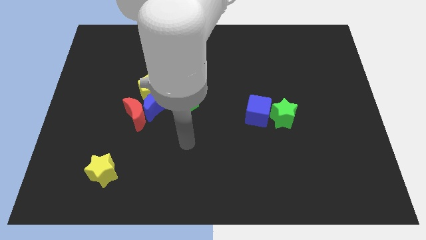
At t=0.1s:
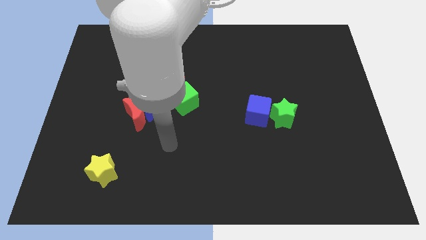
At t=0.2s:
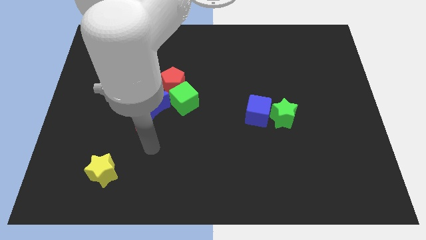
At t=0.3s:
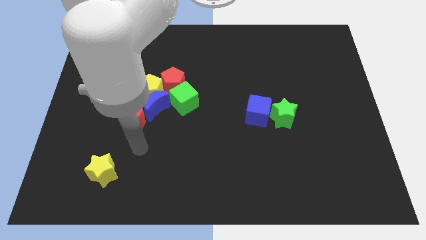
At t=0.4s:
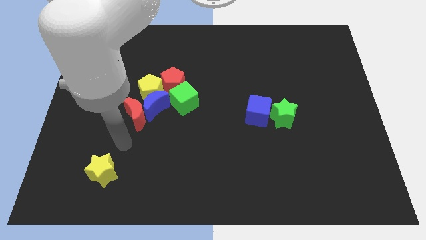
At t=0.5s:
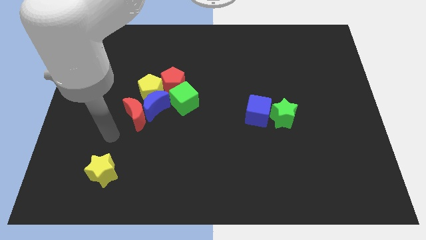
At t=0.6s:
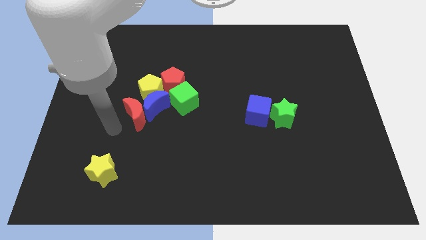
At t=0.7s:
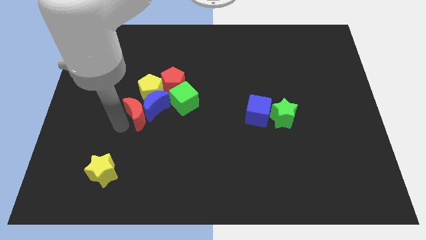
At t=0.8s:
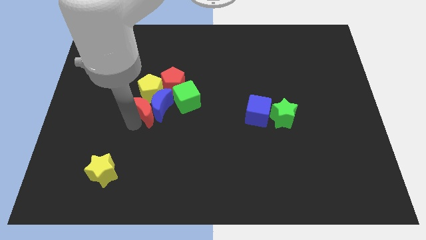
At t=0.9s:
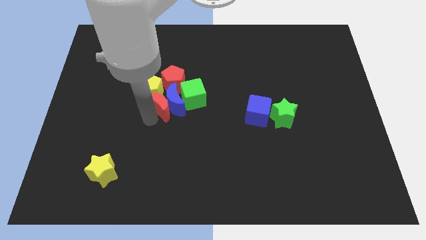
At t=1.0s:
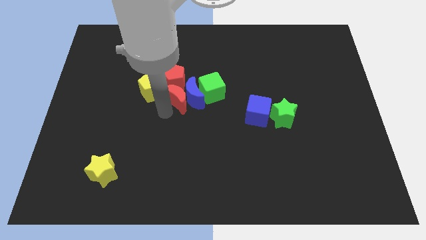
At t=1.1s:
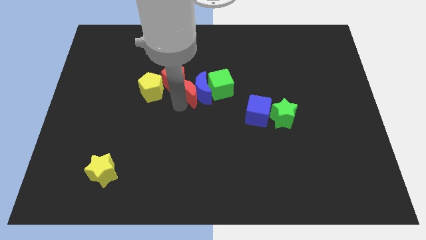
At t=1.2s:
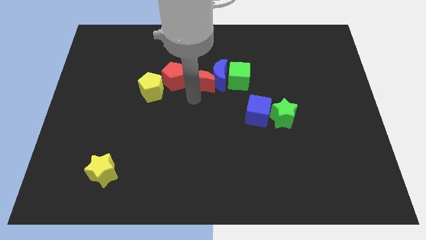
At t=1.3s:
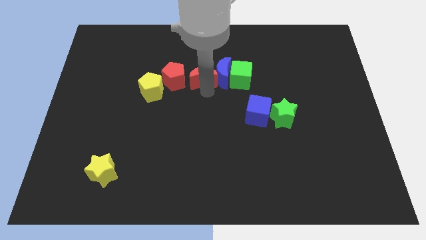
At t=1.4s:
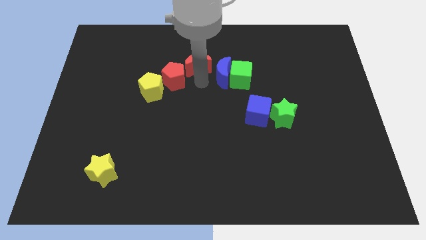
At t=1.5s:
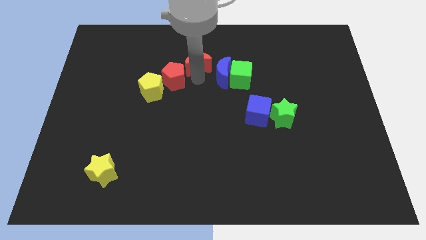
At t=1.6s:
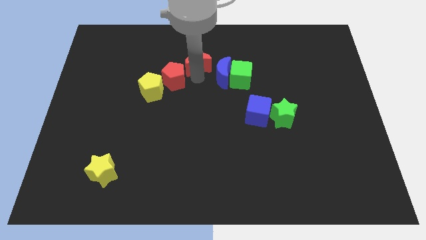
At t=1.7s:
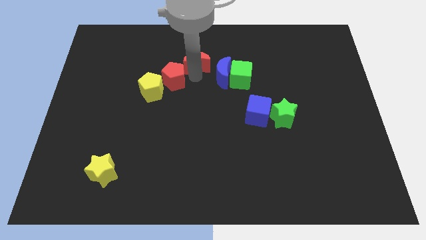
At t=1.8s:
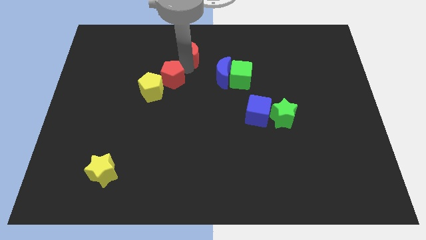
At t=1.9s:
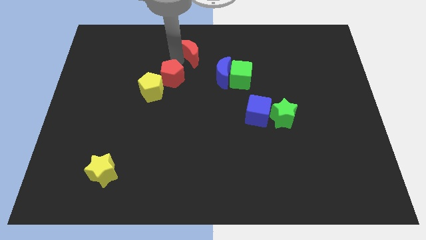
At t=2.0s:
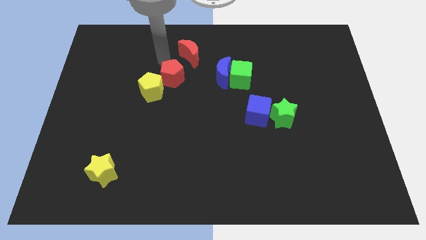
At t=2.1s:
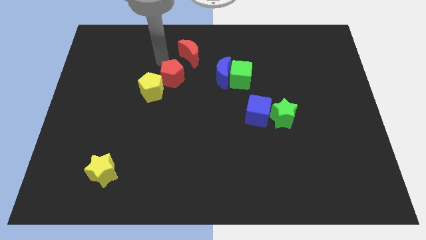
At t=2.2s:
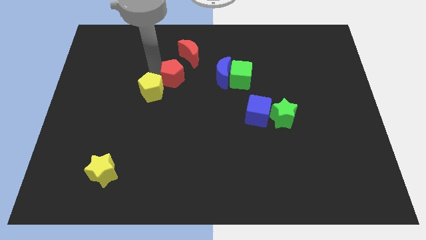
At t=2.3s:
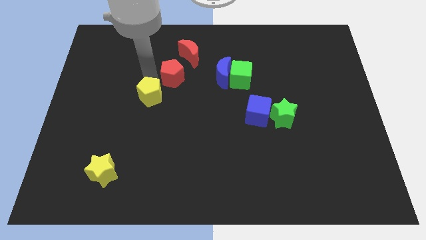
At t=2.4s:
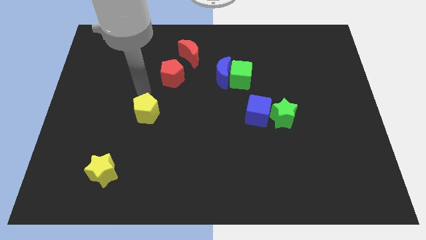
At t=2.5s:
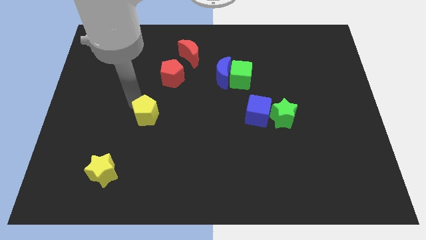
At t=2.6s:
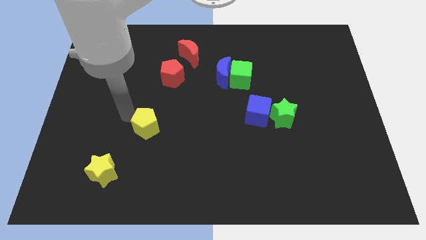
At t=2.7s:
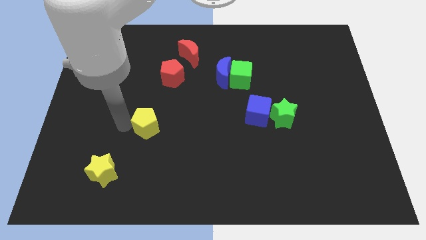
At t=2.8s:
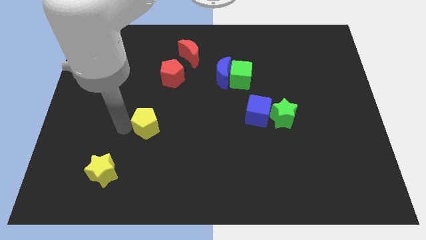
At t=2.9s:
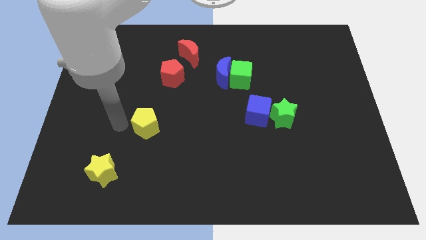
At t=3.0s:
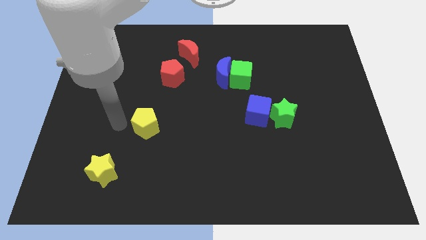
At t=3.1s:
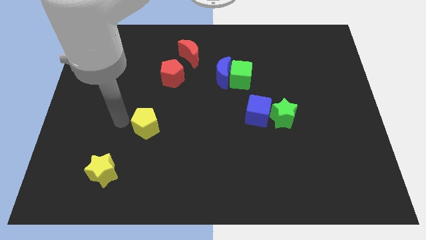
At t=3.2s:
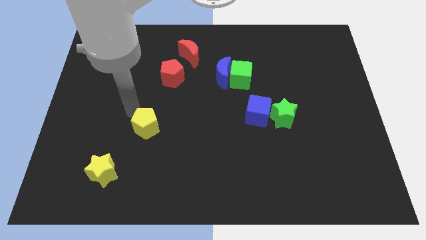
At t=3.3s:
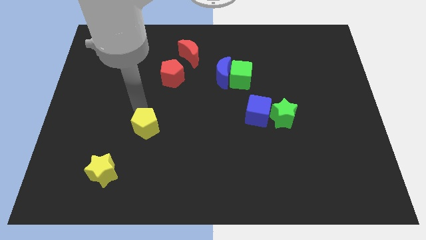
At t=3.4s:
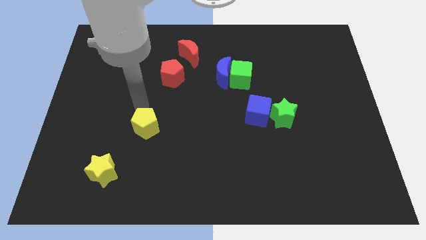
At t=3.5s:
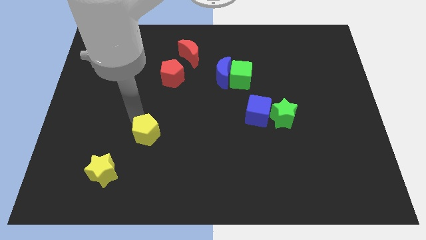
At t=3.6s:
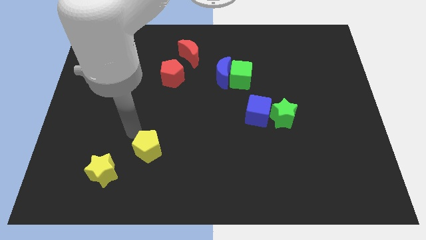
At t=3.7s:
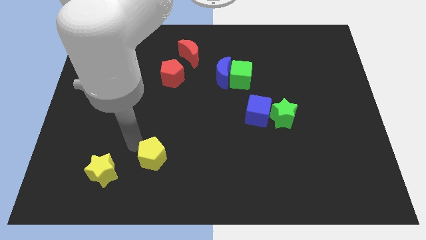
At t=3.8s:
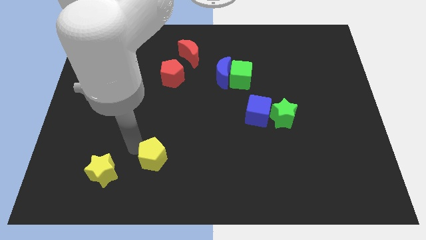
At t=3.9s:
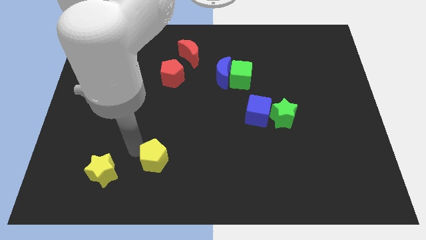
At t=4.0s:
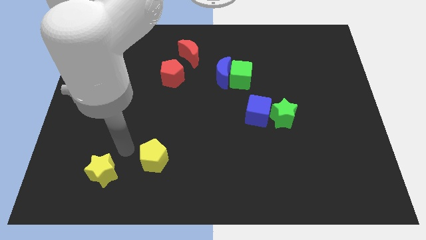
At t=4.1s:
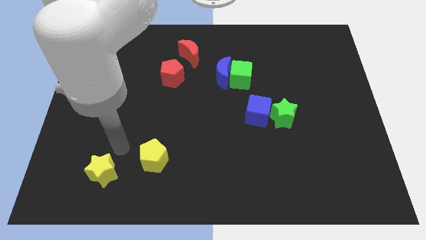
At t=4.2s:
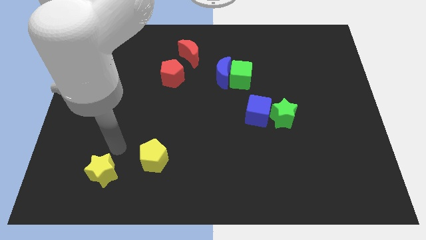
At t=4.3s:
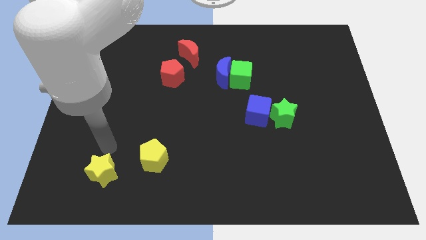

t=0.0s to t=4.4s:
move the yellow pentagon to the top right of the yellow star

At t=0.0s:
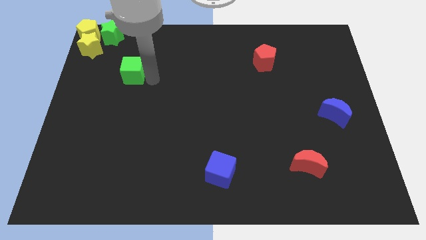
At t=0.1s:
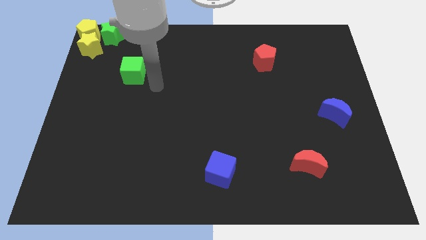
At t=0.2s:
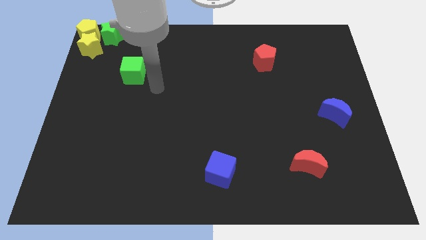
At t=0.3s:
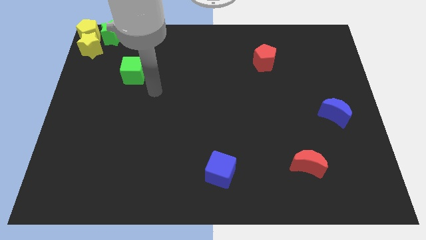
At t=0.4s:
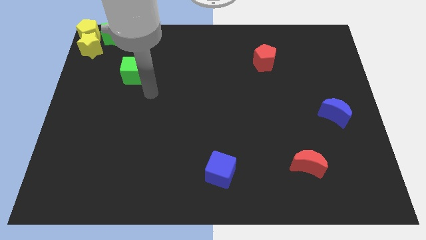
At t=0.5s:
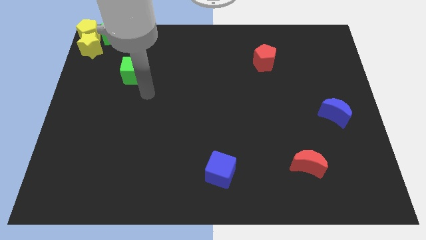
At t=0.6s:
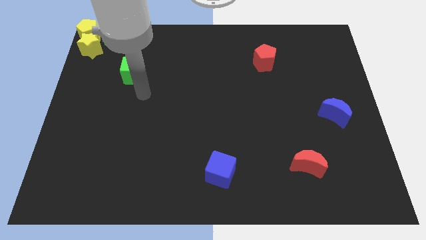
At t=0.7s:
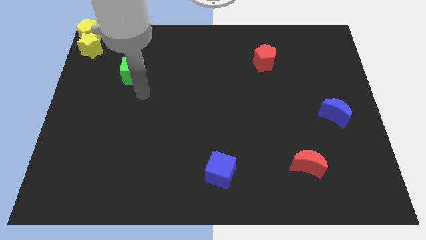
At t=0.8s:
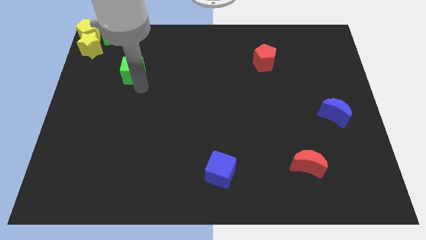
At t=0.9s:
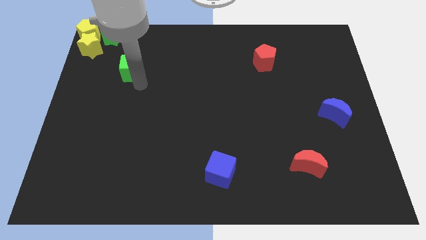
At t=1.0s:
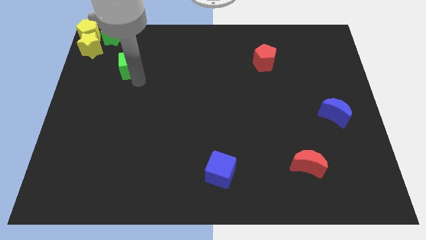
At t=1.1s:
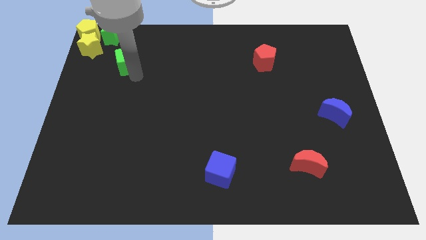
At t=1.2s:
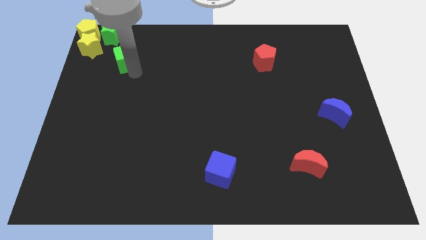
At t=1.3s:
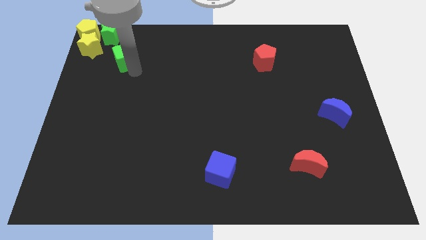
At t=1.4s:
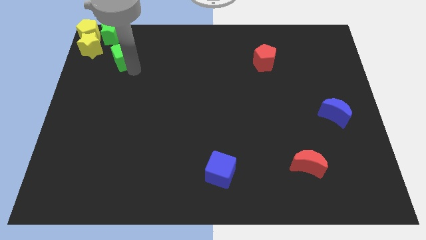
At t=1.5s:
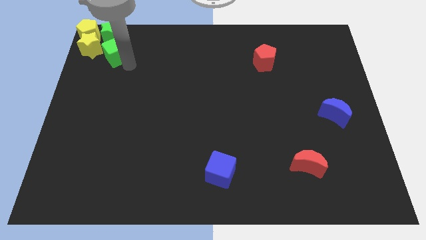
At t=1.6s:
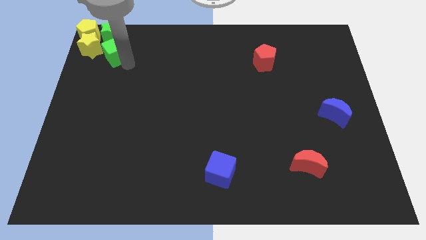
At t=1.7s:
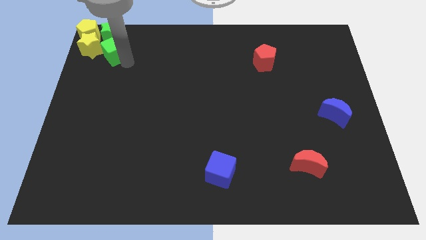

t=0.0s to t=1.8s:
push the green cube towards the top left of the board

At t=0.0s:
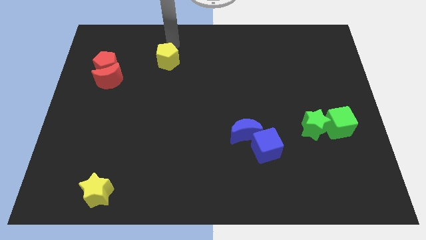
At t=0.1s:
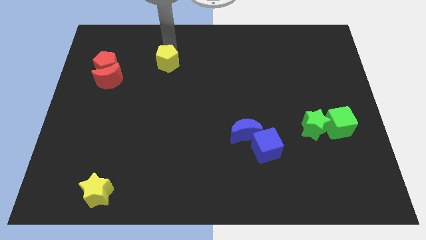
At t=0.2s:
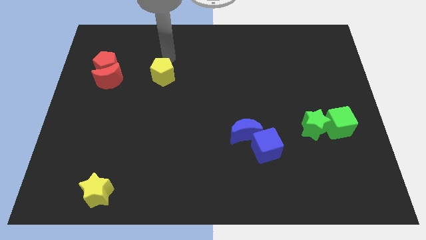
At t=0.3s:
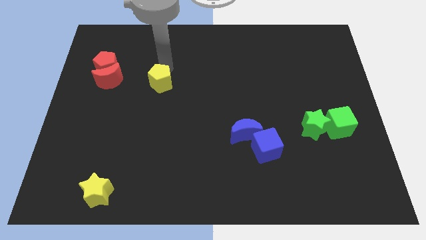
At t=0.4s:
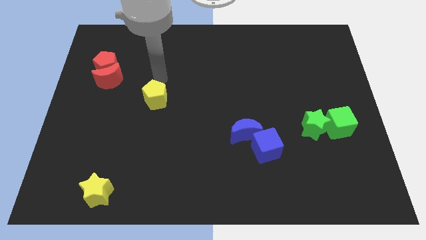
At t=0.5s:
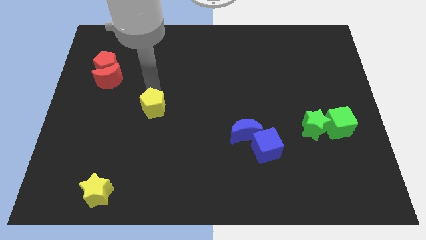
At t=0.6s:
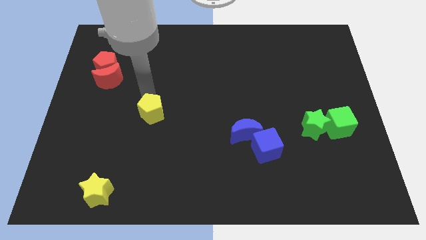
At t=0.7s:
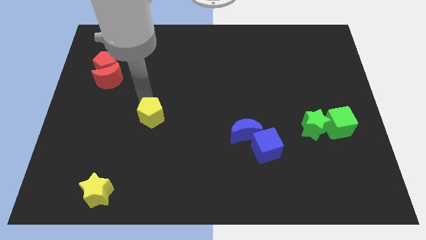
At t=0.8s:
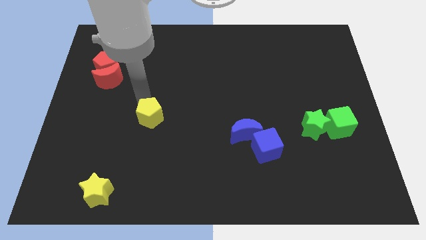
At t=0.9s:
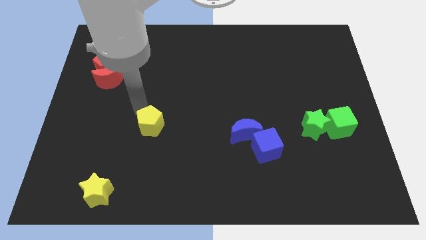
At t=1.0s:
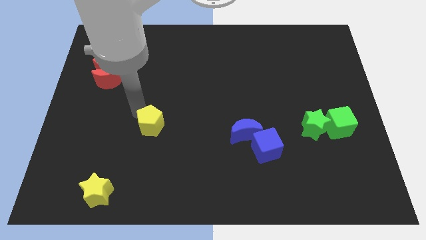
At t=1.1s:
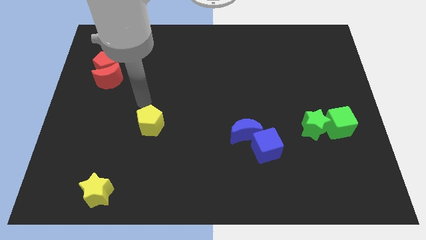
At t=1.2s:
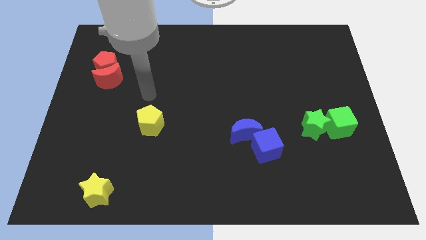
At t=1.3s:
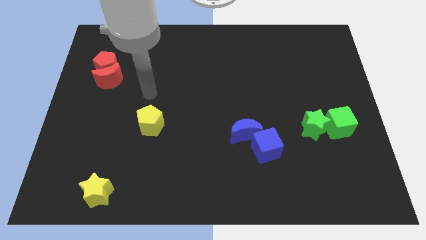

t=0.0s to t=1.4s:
slide the yellow pentagon towards the bottom

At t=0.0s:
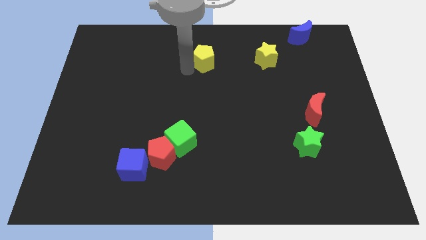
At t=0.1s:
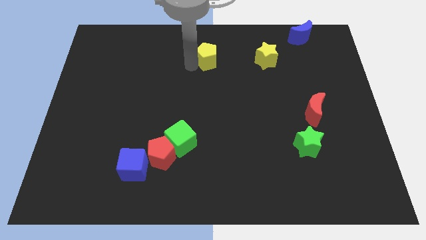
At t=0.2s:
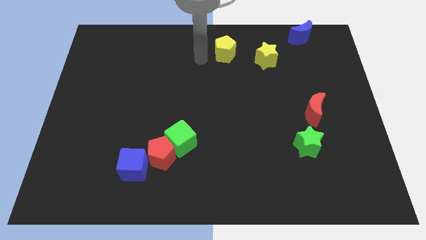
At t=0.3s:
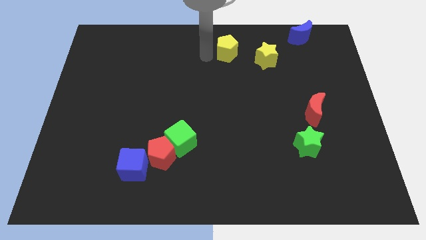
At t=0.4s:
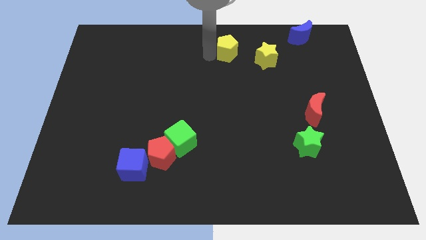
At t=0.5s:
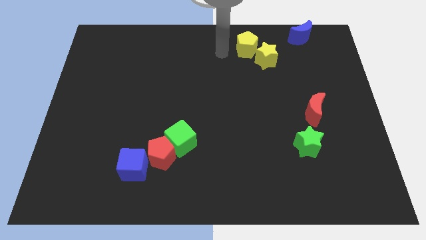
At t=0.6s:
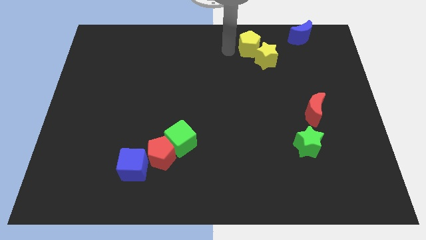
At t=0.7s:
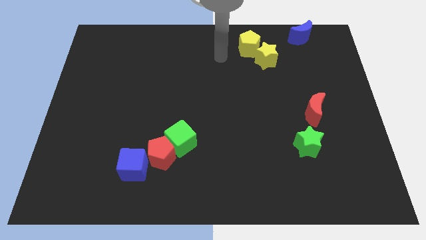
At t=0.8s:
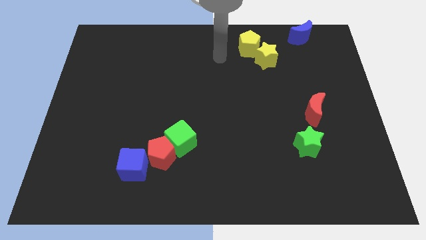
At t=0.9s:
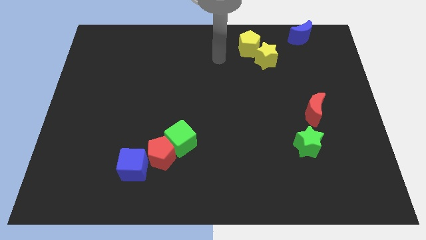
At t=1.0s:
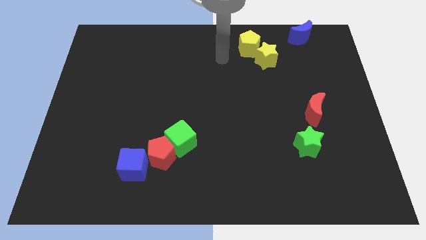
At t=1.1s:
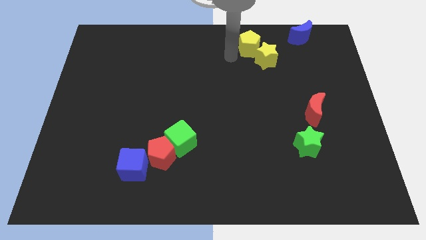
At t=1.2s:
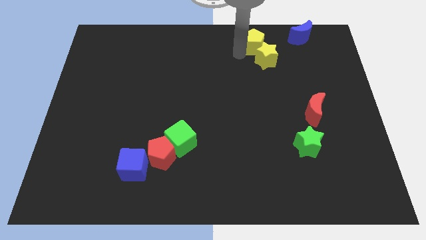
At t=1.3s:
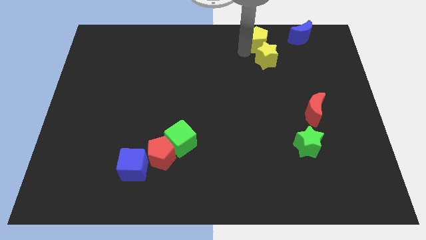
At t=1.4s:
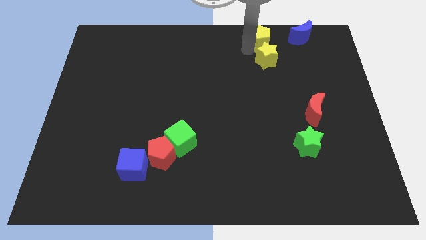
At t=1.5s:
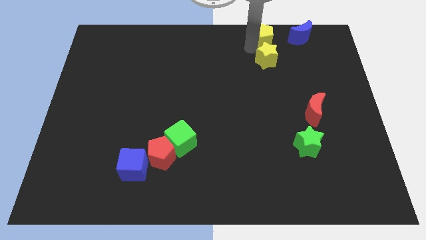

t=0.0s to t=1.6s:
place the yellow pentagon at the top of the yellow star
